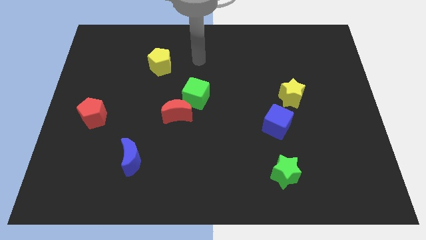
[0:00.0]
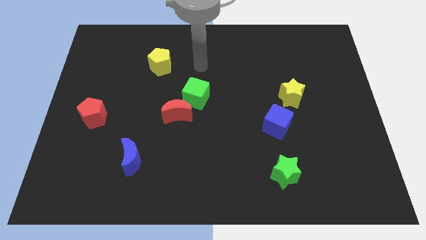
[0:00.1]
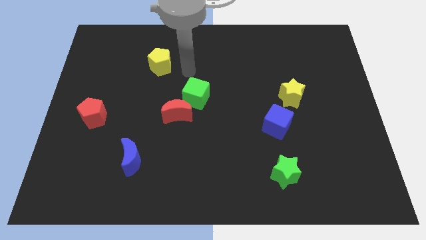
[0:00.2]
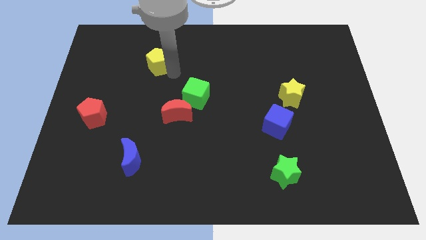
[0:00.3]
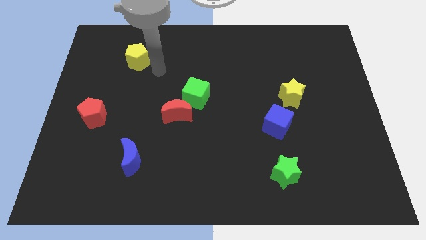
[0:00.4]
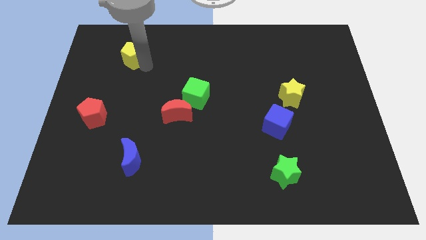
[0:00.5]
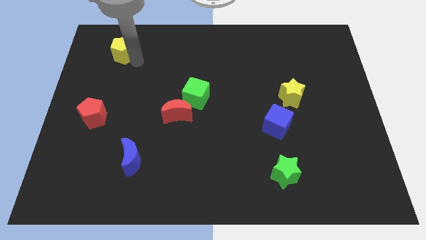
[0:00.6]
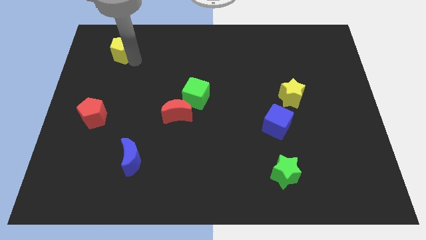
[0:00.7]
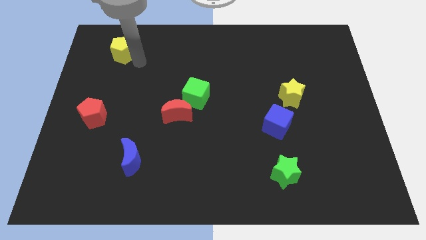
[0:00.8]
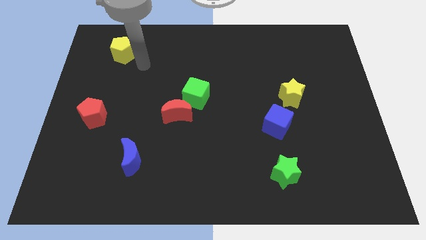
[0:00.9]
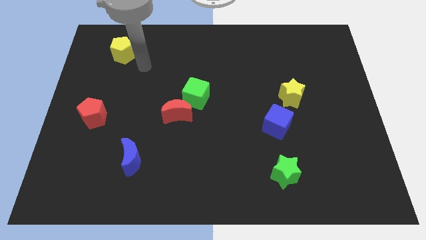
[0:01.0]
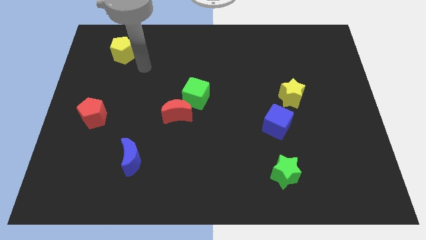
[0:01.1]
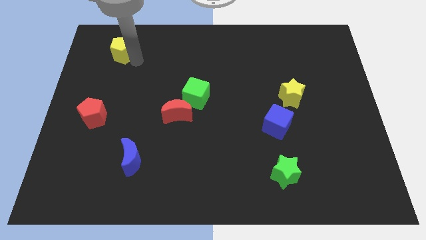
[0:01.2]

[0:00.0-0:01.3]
push the yellow pentagon parallel to the top of red pentagon

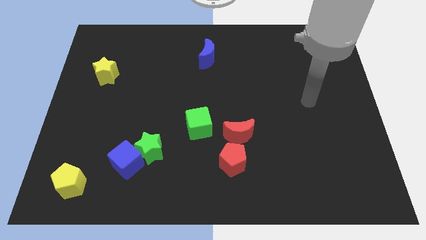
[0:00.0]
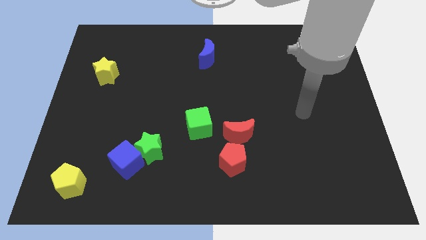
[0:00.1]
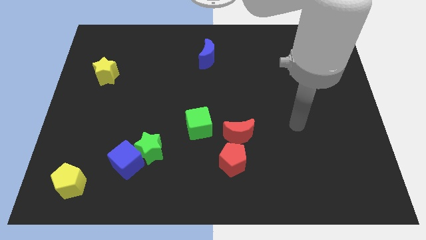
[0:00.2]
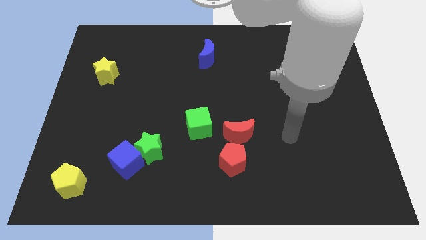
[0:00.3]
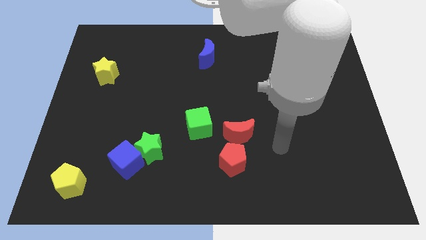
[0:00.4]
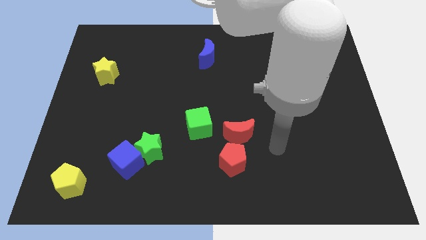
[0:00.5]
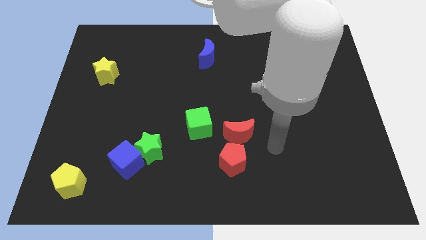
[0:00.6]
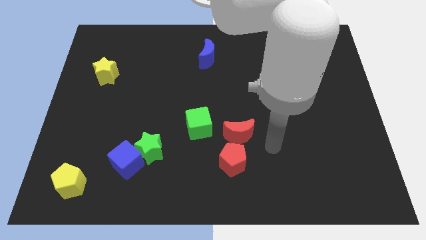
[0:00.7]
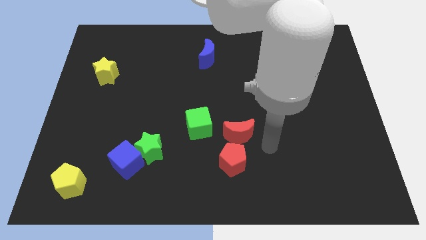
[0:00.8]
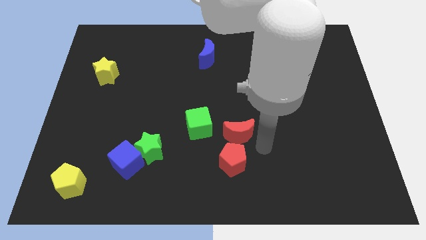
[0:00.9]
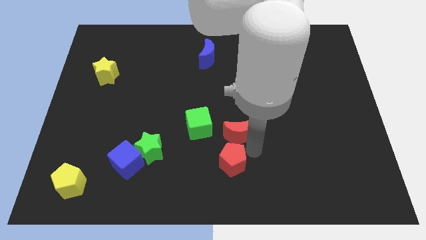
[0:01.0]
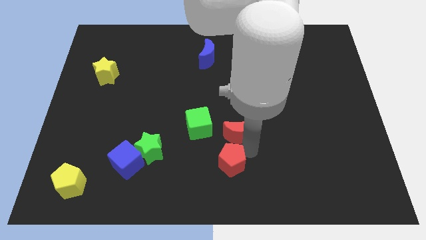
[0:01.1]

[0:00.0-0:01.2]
tap the red pentagon

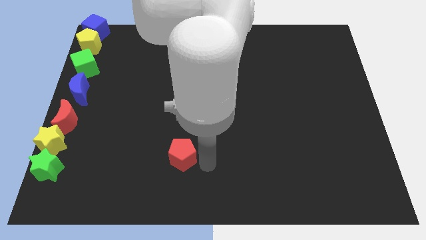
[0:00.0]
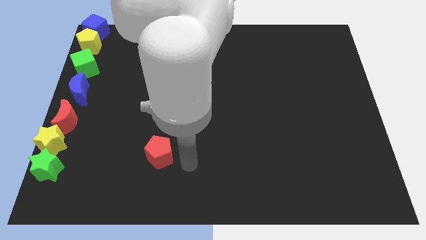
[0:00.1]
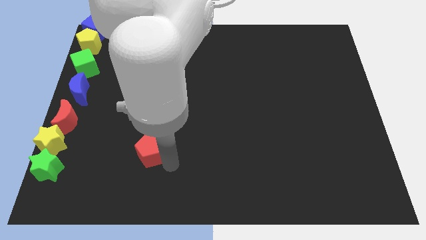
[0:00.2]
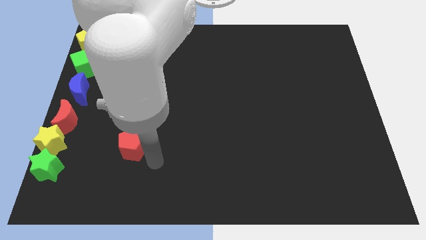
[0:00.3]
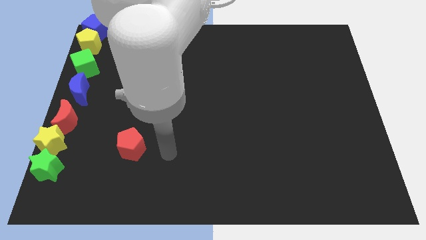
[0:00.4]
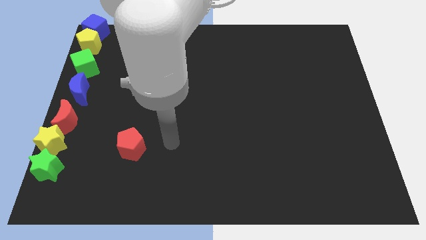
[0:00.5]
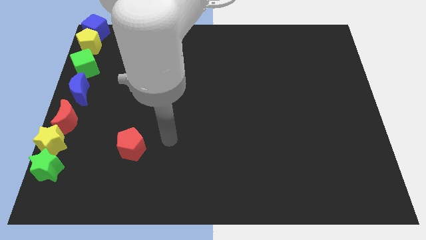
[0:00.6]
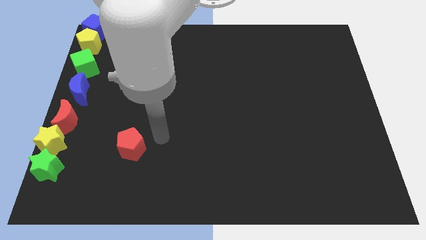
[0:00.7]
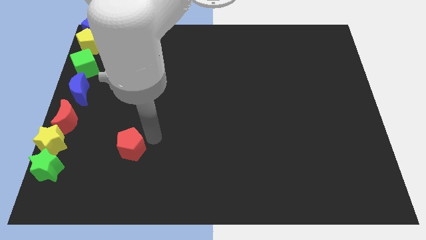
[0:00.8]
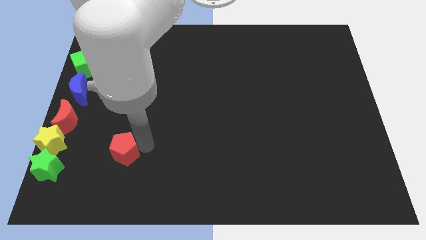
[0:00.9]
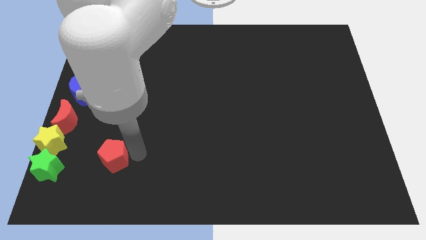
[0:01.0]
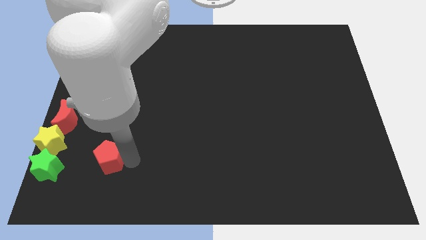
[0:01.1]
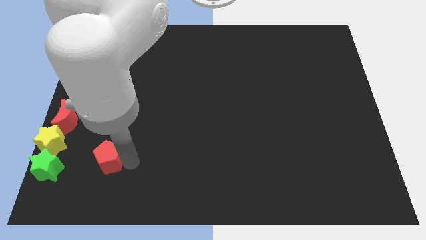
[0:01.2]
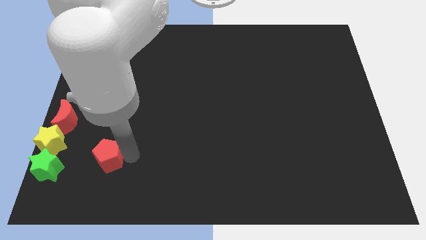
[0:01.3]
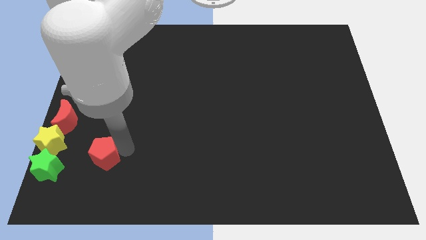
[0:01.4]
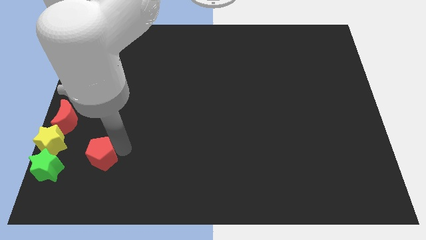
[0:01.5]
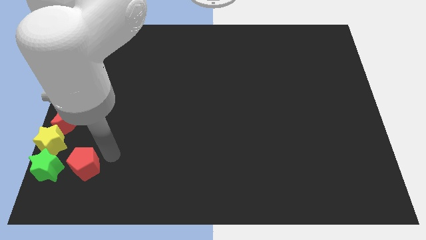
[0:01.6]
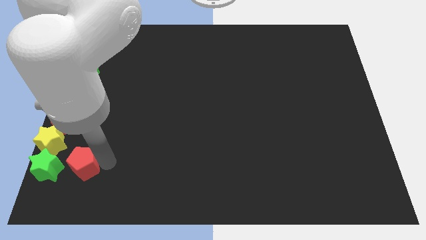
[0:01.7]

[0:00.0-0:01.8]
place the red pentagon to the right side of the green star

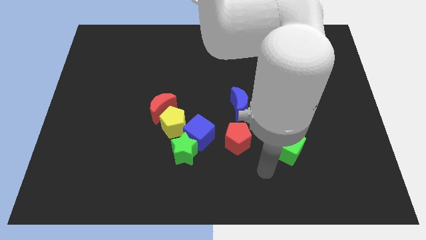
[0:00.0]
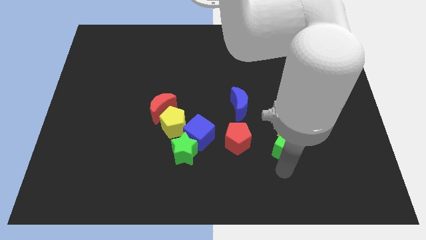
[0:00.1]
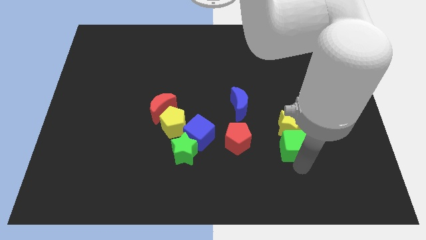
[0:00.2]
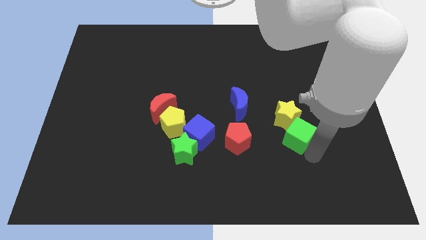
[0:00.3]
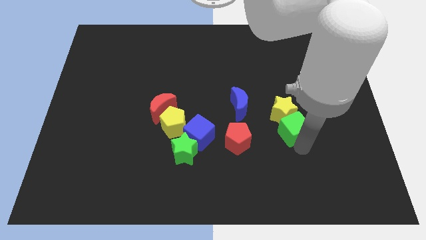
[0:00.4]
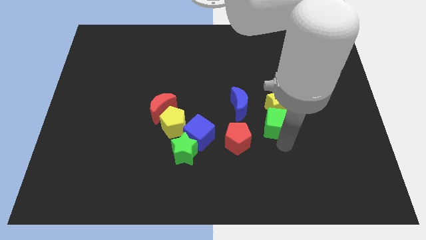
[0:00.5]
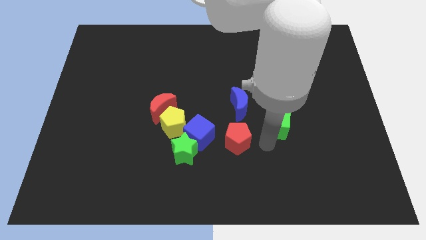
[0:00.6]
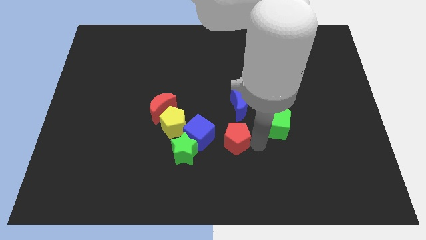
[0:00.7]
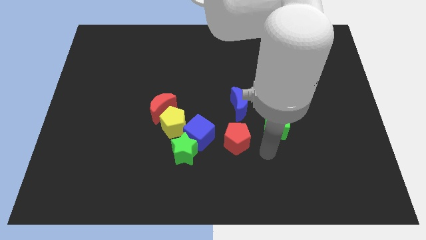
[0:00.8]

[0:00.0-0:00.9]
push the green cube into the yellow star

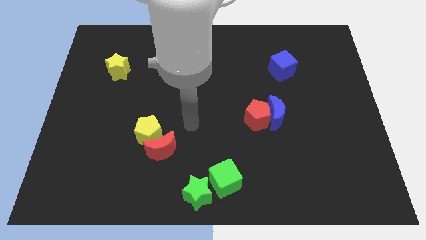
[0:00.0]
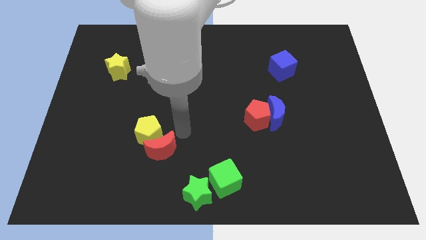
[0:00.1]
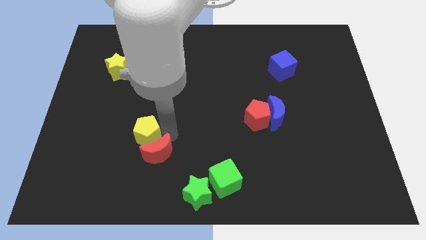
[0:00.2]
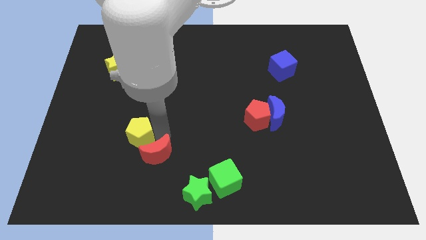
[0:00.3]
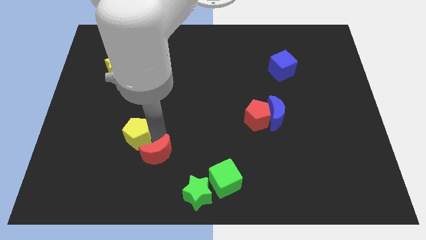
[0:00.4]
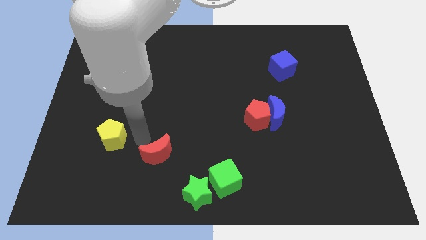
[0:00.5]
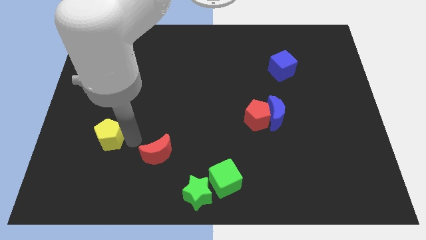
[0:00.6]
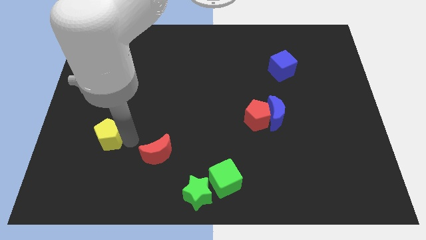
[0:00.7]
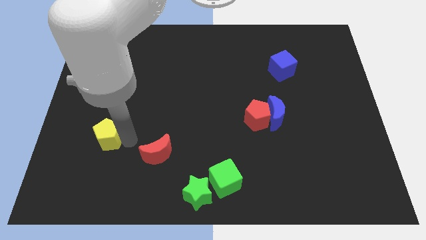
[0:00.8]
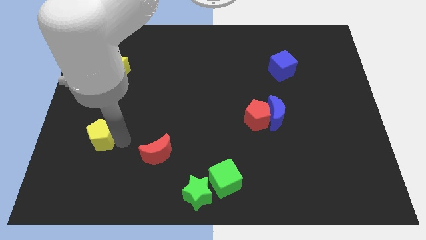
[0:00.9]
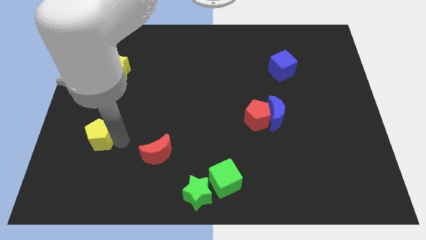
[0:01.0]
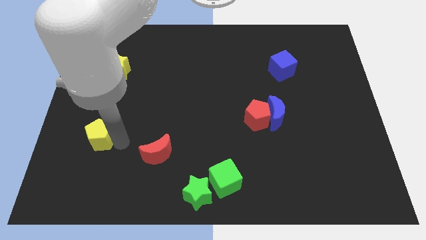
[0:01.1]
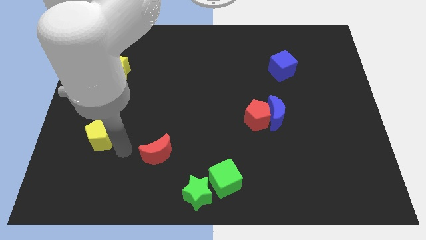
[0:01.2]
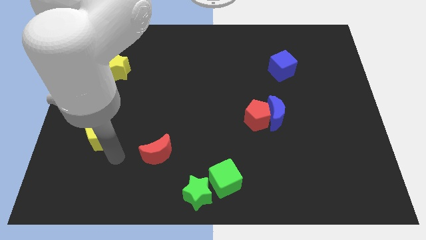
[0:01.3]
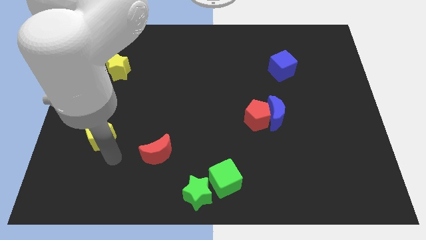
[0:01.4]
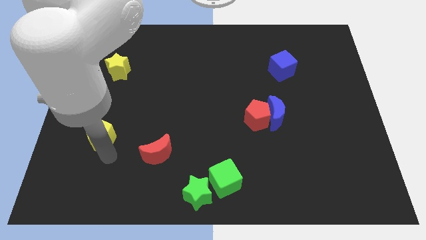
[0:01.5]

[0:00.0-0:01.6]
put the yellow pentagon vertically below the yellow star

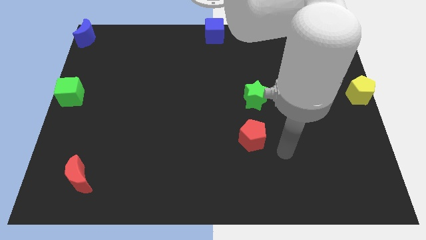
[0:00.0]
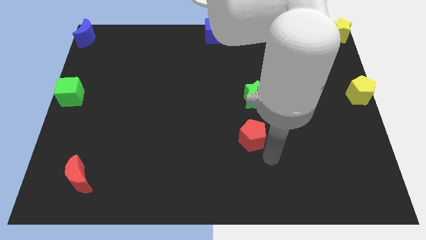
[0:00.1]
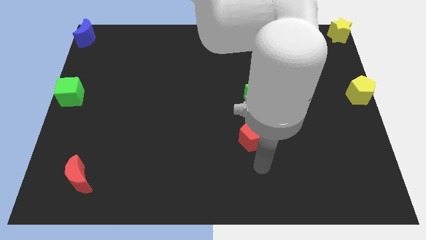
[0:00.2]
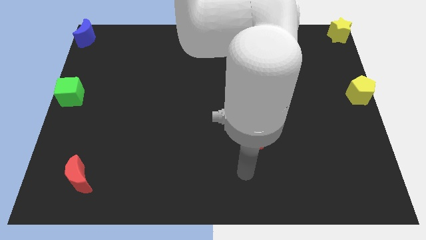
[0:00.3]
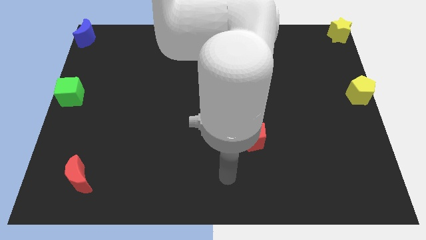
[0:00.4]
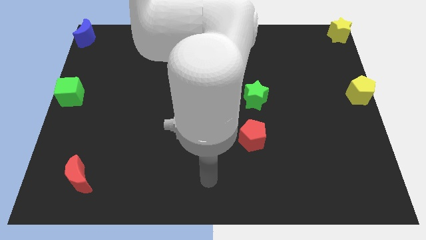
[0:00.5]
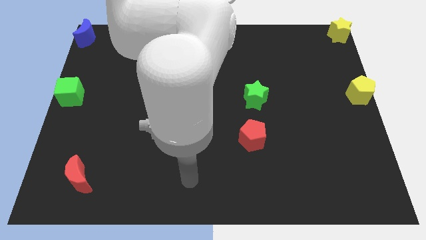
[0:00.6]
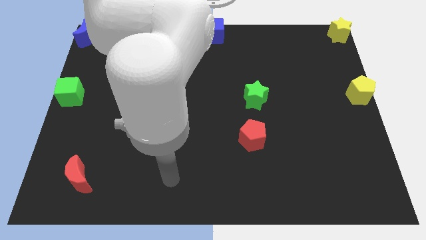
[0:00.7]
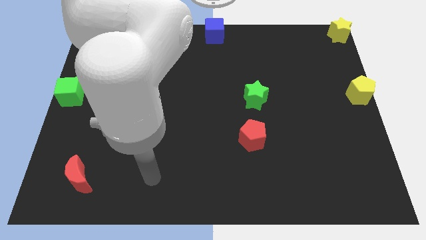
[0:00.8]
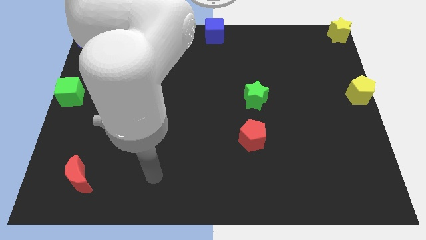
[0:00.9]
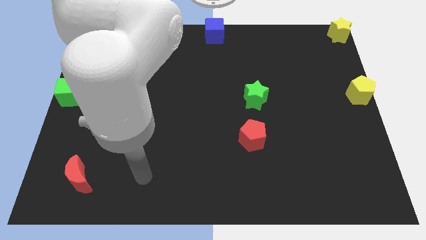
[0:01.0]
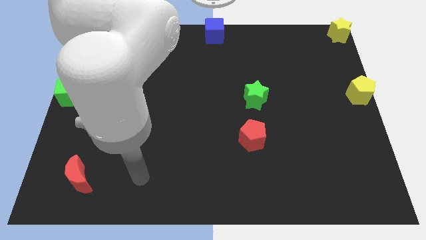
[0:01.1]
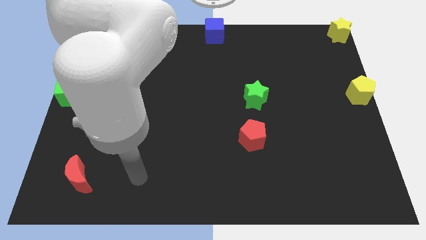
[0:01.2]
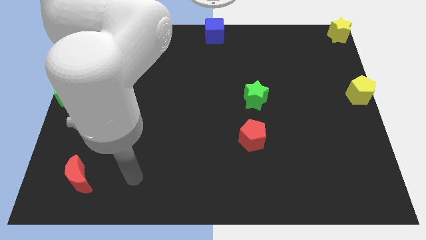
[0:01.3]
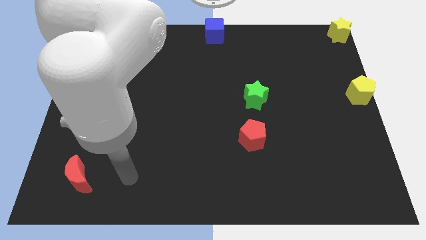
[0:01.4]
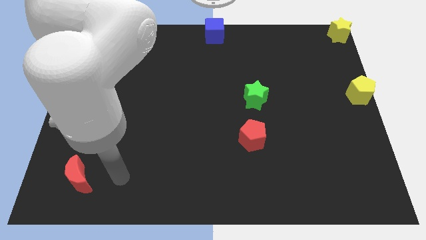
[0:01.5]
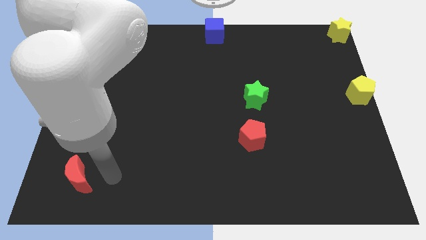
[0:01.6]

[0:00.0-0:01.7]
point your arm to the right side of red crescent

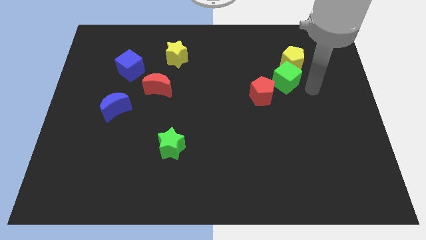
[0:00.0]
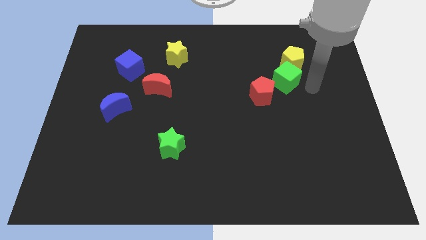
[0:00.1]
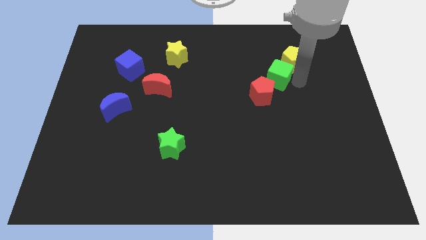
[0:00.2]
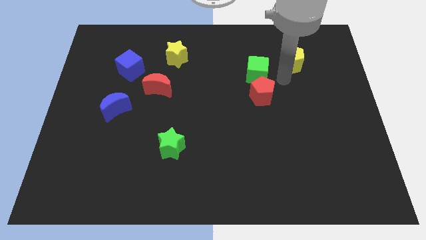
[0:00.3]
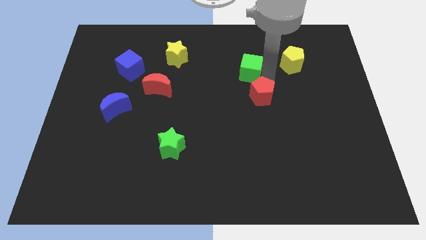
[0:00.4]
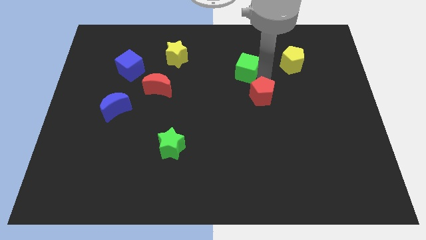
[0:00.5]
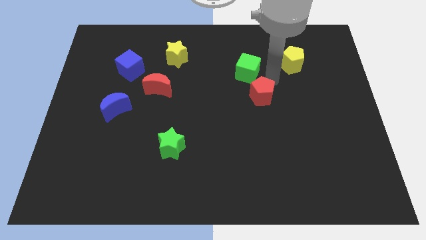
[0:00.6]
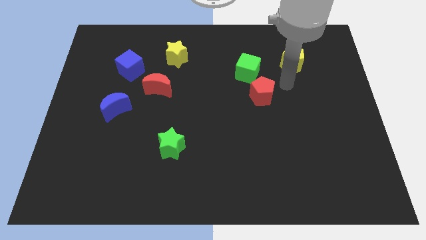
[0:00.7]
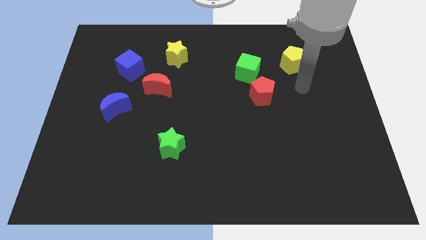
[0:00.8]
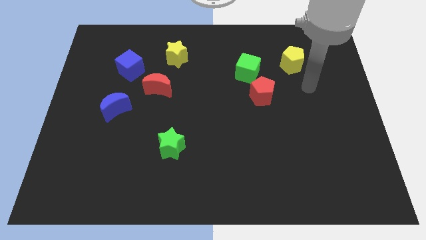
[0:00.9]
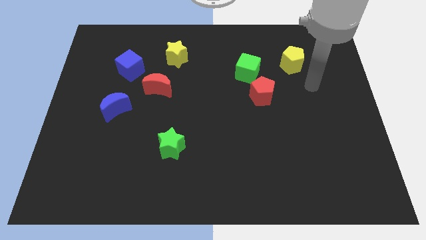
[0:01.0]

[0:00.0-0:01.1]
slide green cube to the top left of red pentagon
